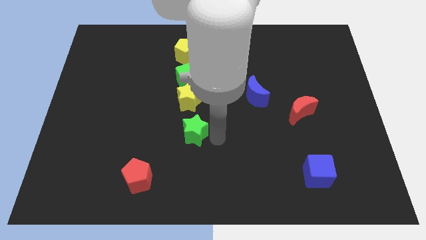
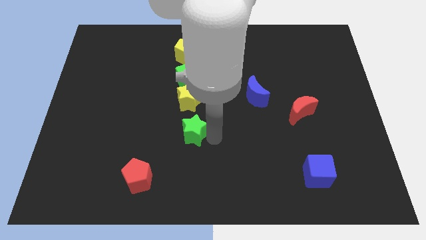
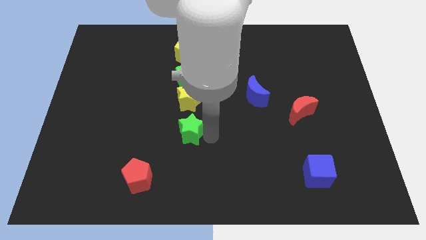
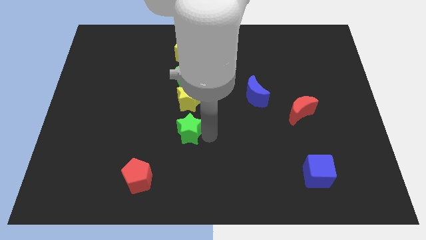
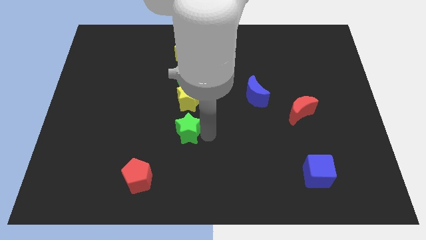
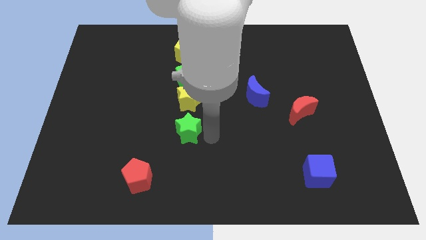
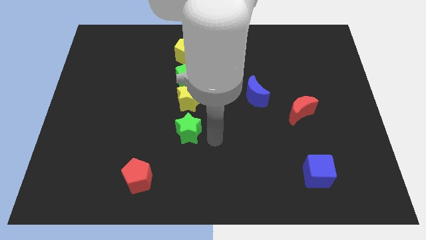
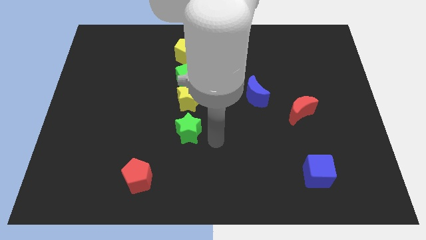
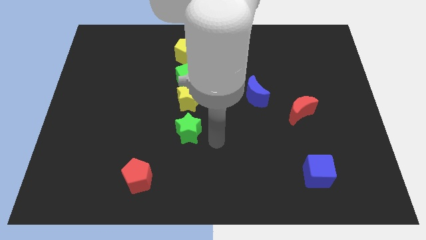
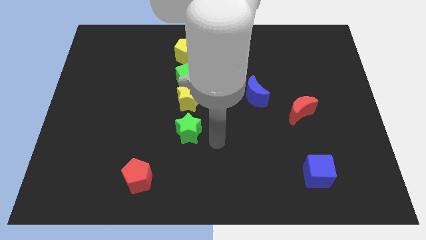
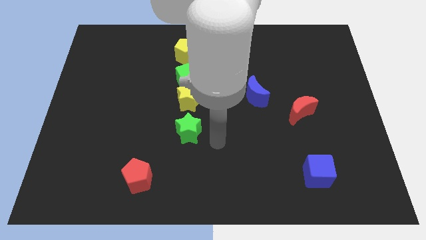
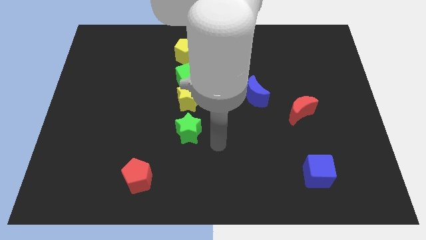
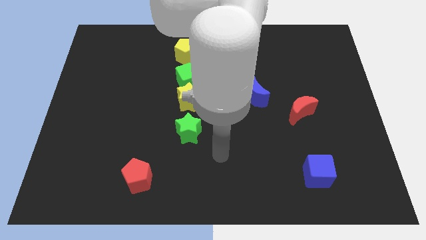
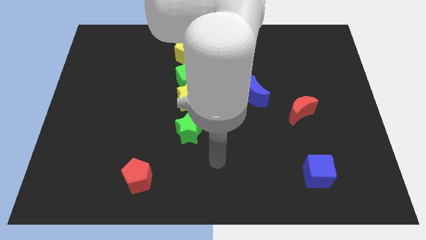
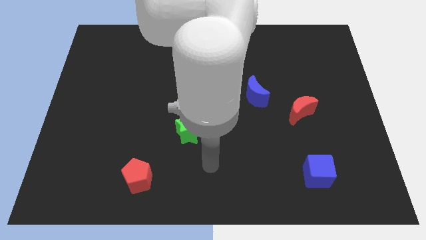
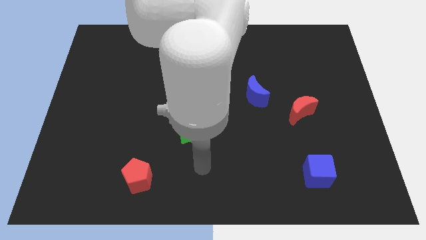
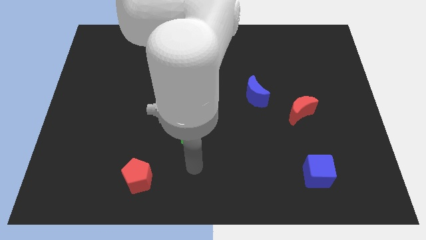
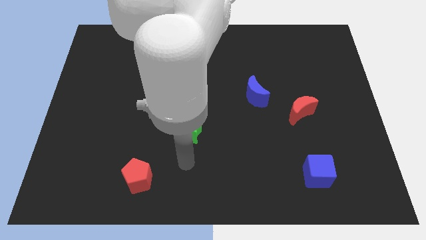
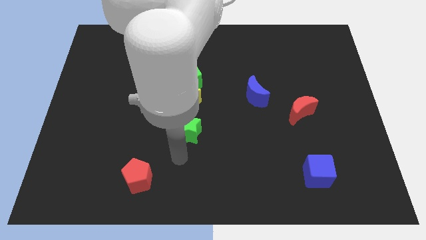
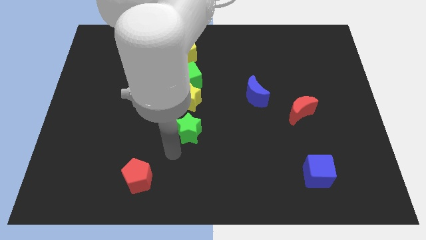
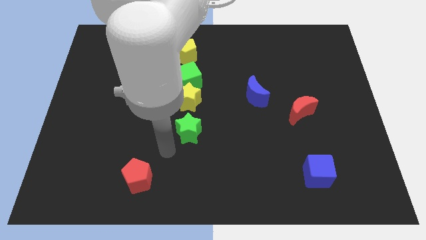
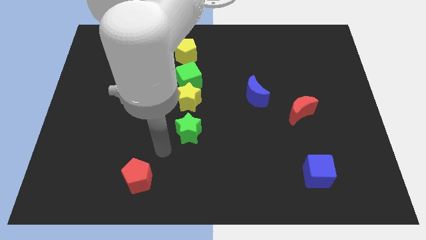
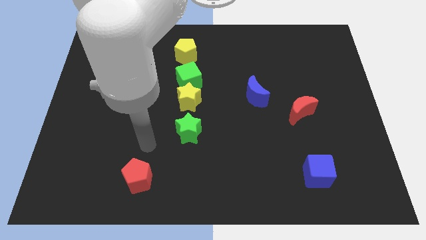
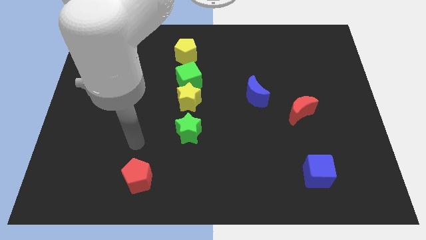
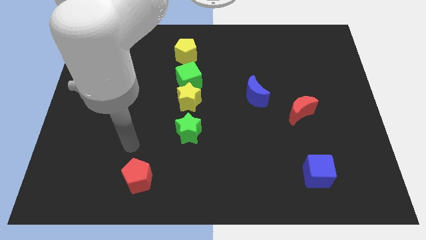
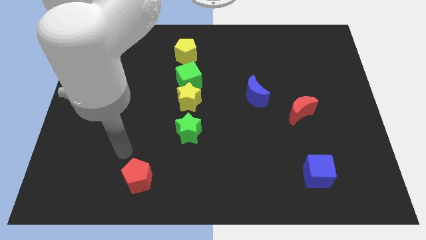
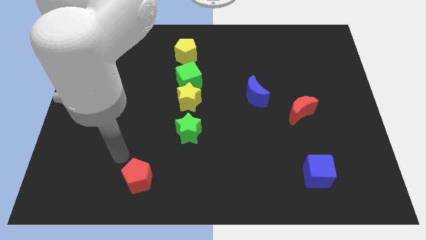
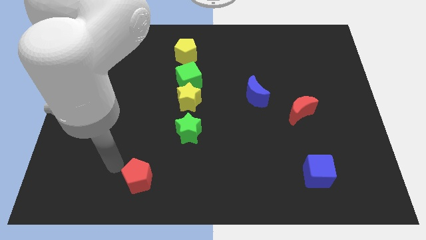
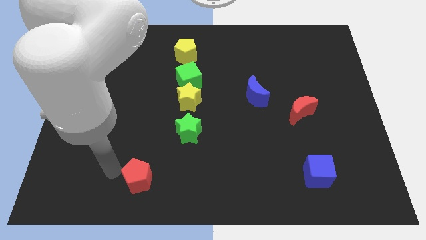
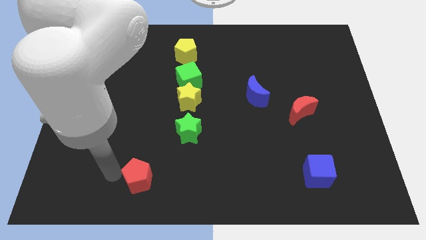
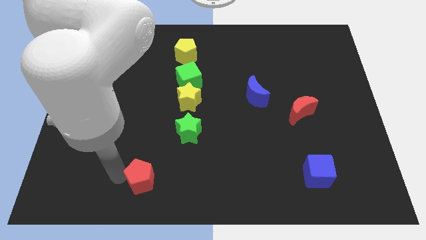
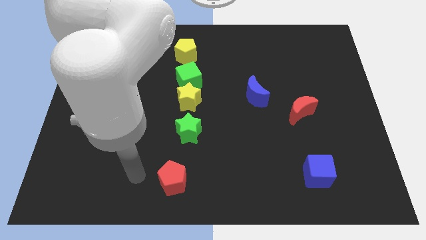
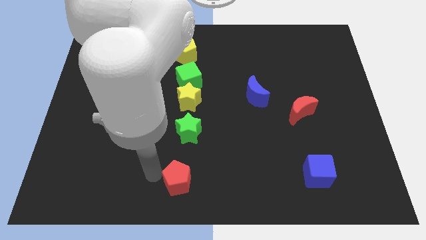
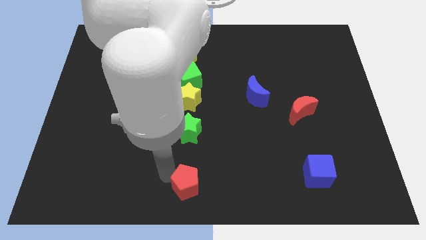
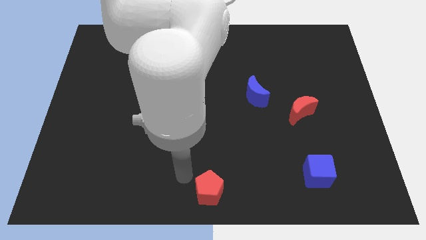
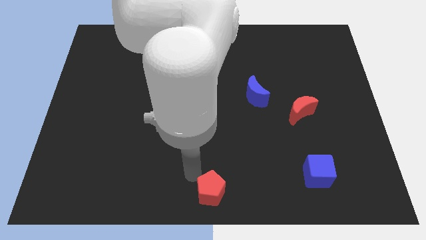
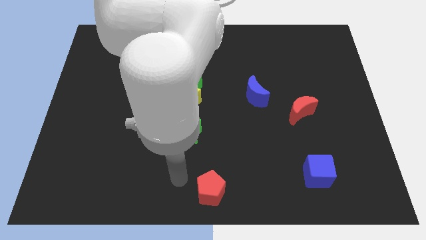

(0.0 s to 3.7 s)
push the red pentagon to the bottom center of the board

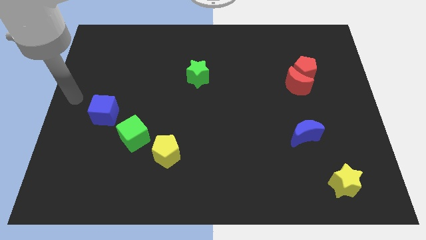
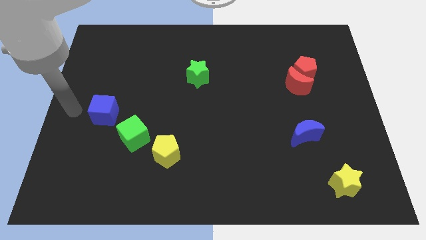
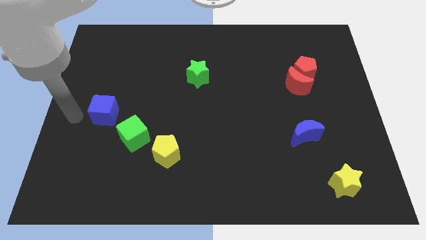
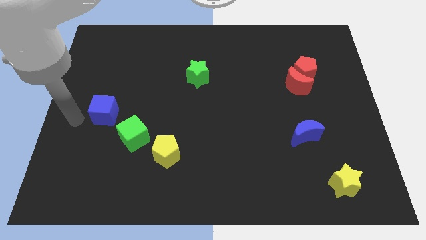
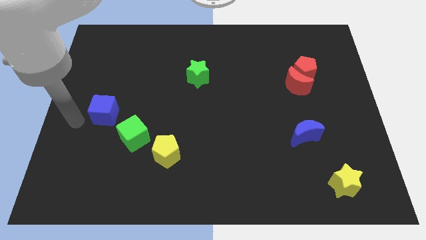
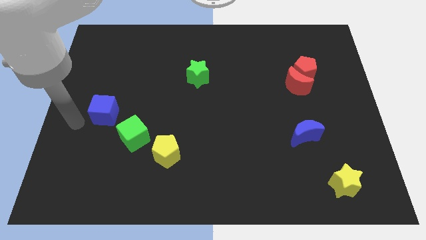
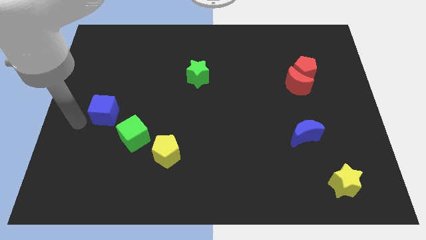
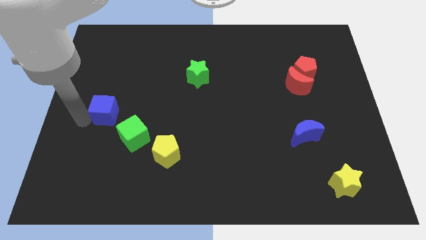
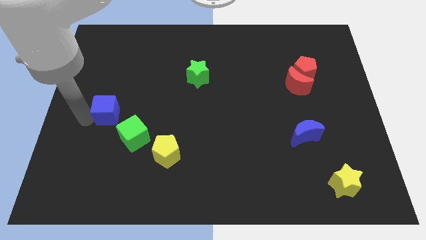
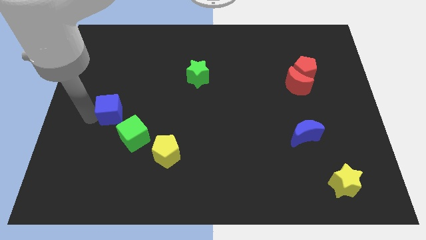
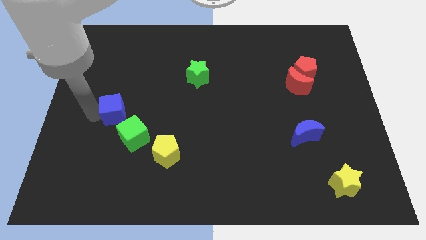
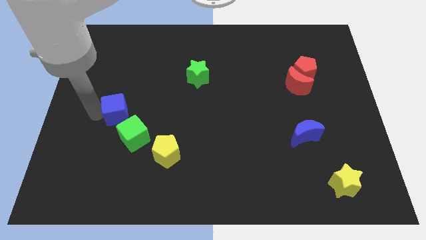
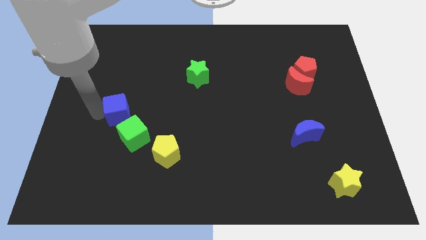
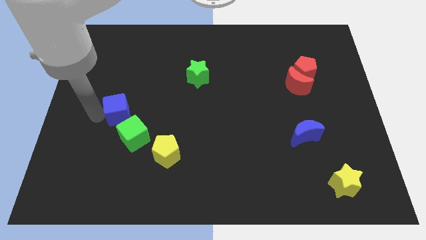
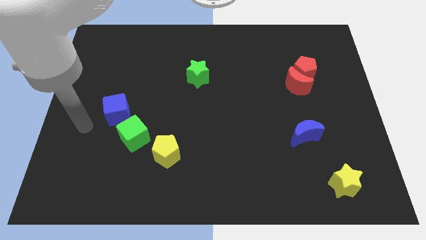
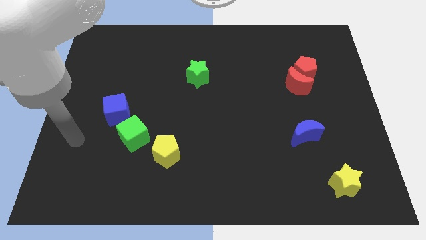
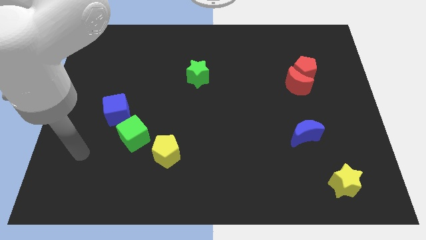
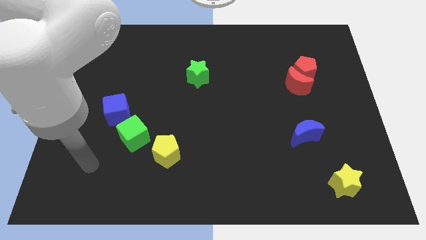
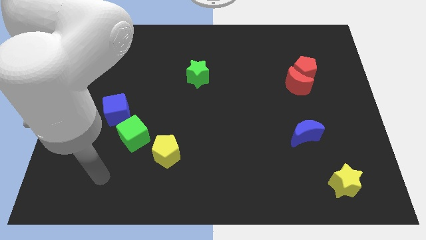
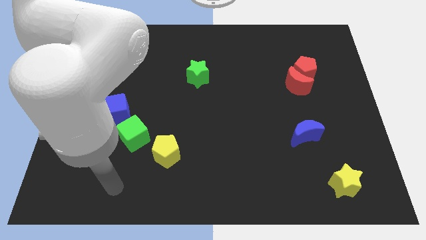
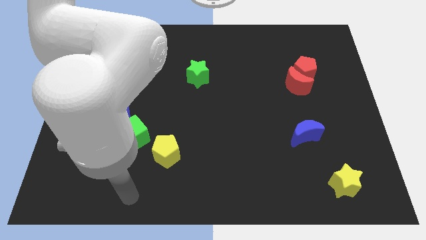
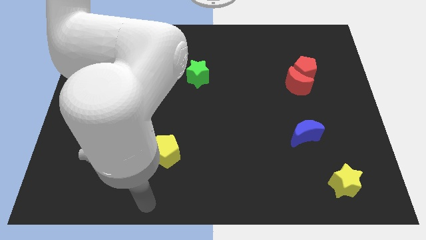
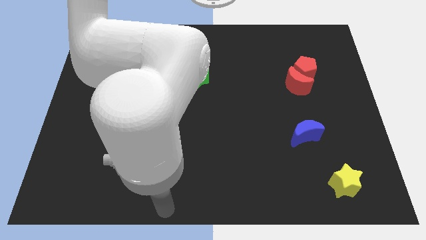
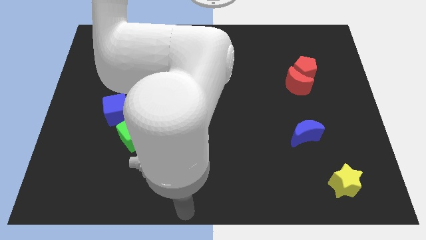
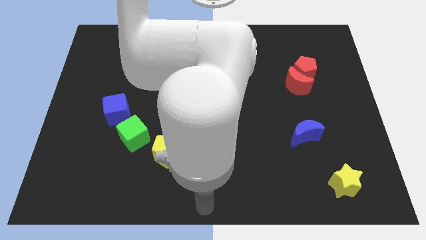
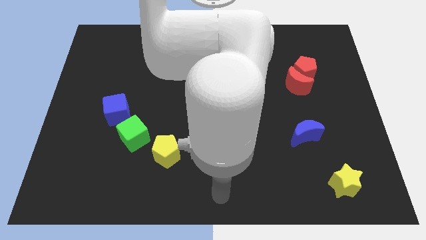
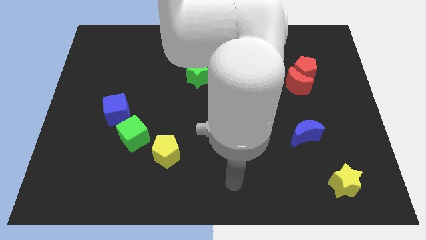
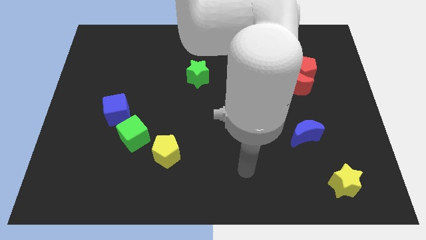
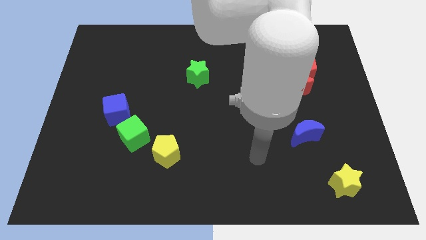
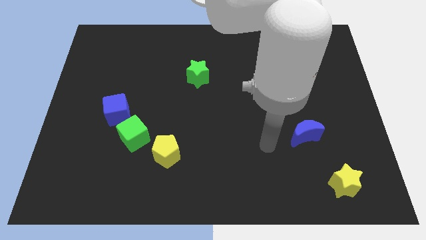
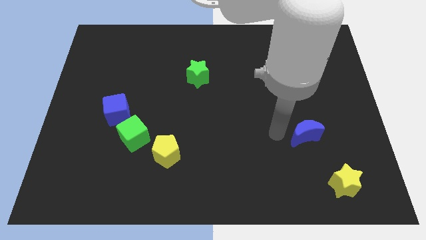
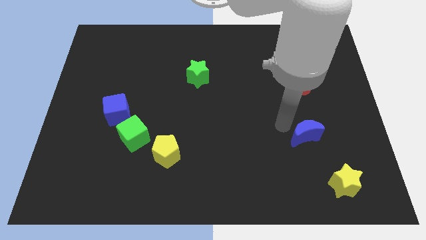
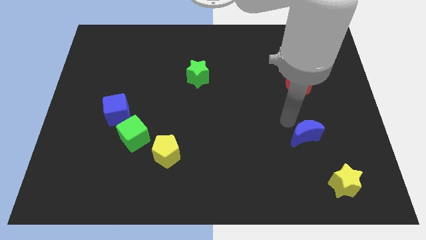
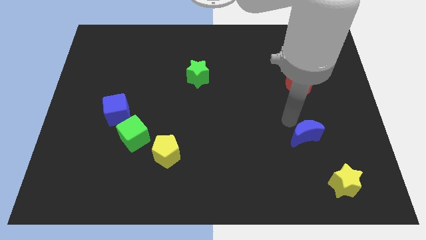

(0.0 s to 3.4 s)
push the blue cube to the top left side of the green cube

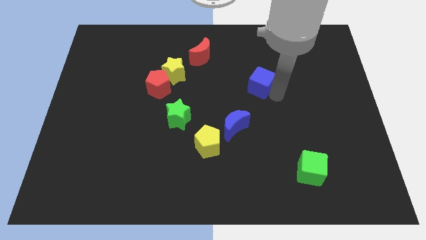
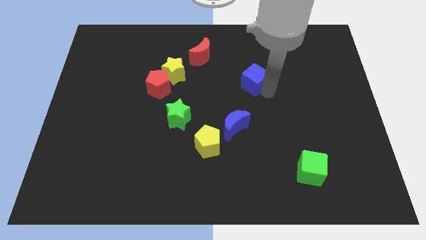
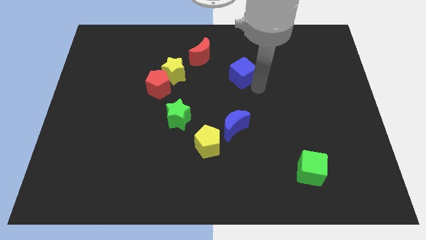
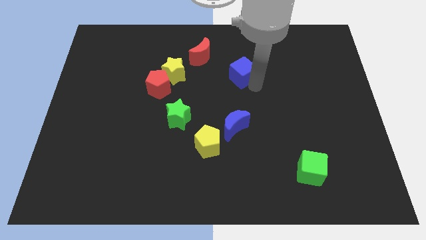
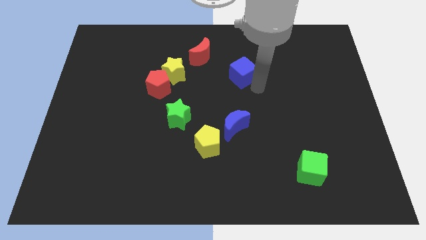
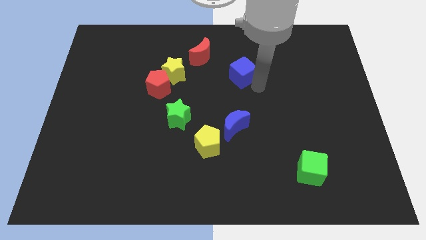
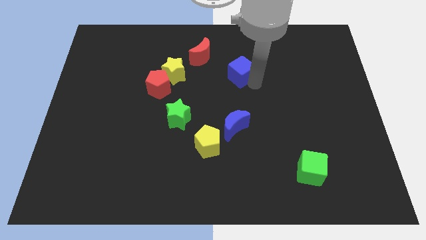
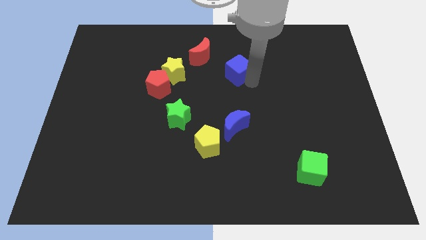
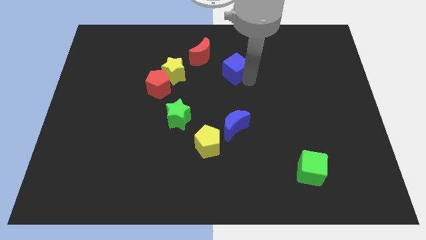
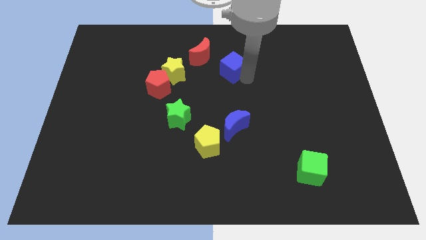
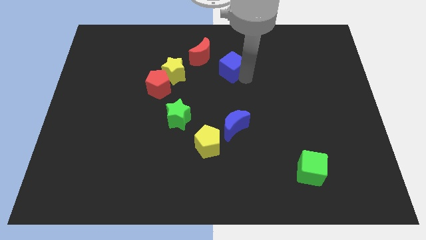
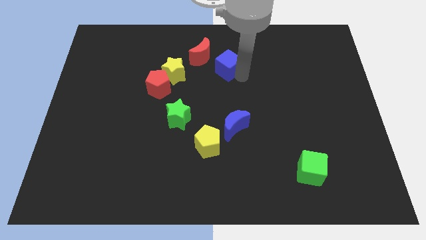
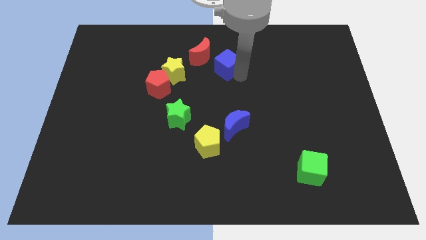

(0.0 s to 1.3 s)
place the blue cube towards the bottom right side of the red crescent

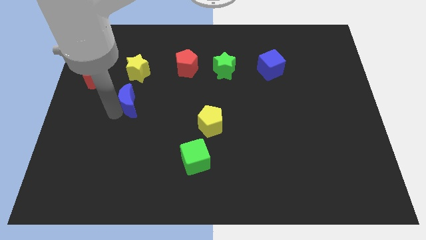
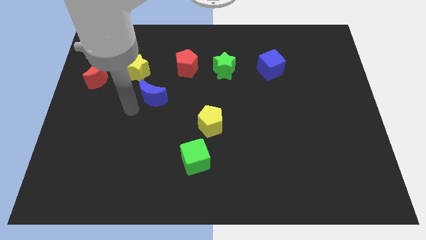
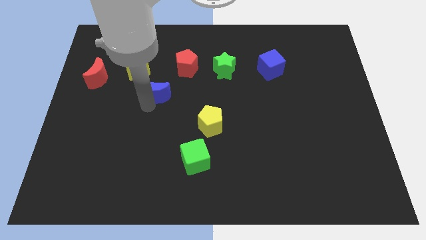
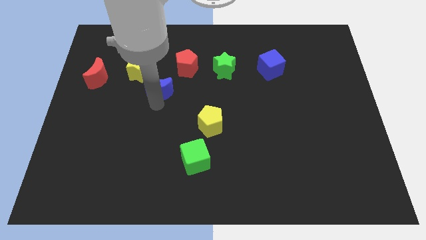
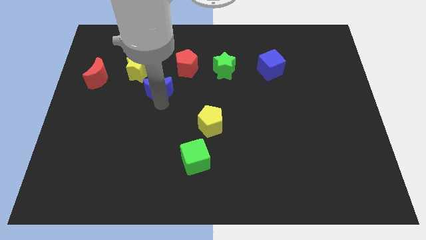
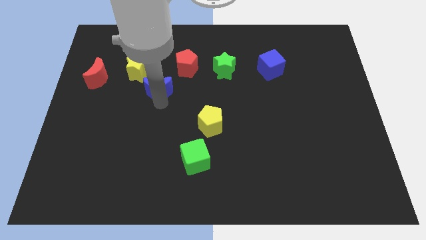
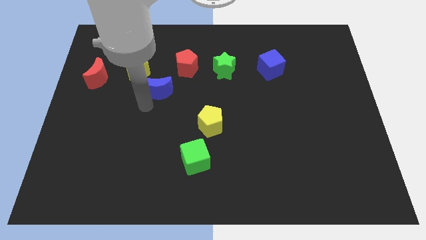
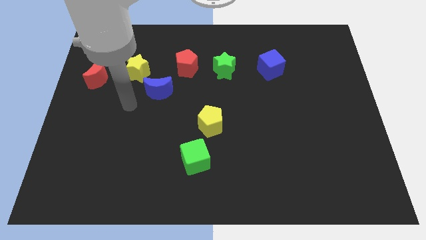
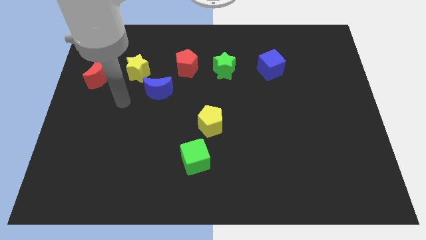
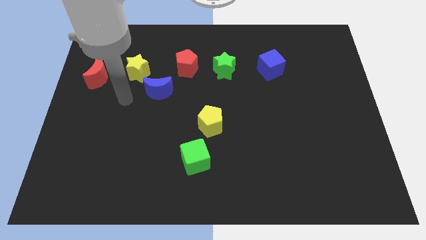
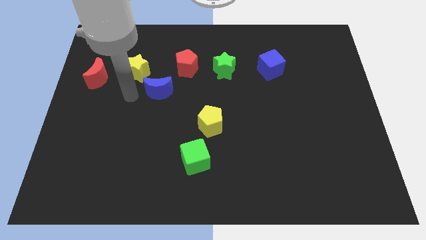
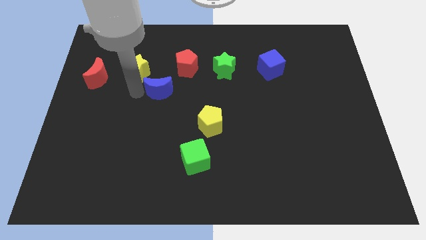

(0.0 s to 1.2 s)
push blue moon near yellow star
